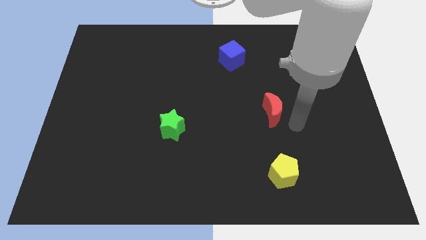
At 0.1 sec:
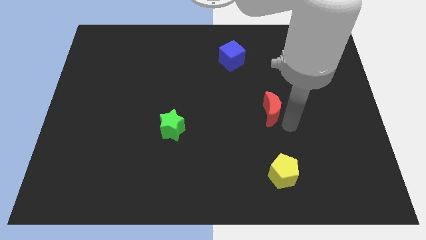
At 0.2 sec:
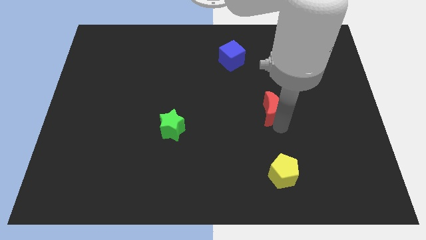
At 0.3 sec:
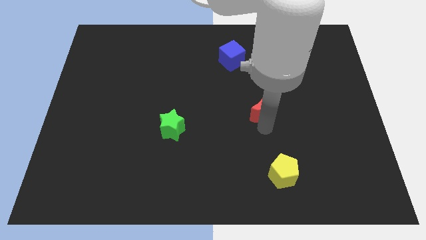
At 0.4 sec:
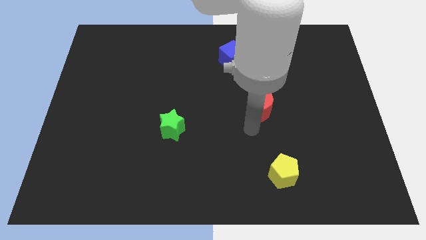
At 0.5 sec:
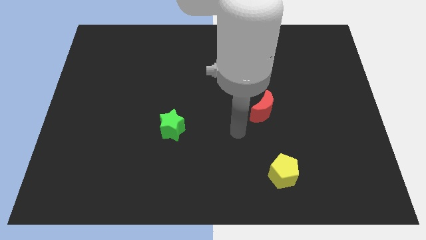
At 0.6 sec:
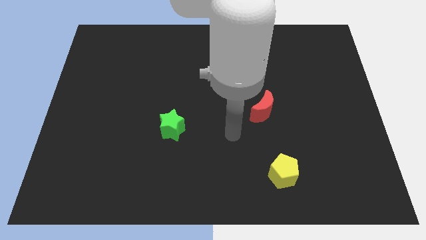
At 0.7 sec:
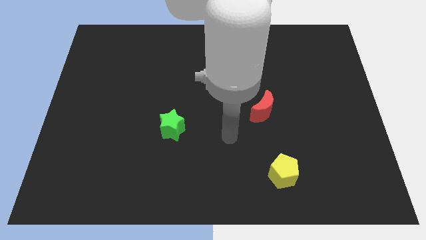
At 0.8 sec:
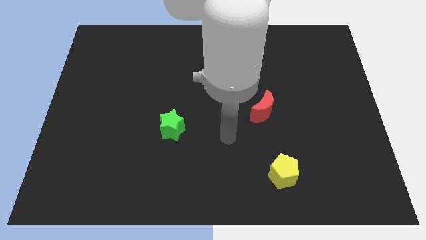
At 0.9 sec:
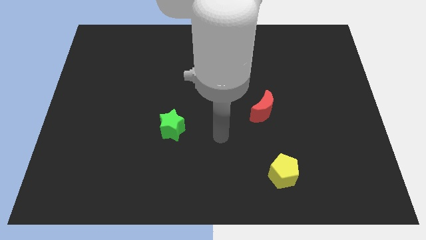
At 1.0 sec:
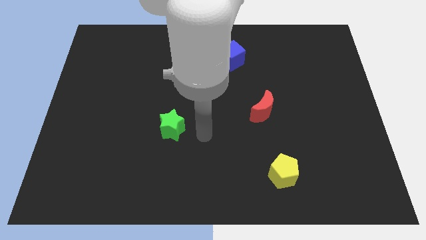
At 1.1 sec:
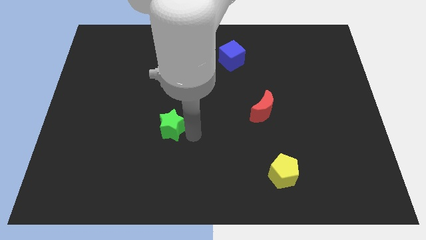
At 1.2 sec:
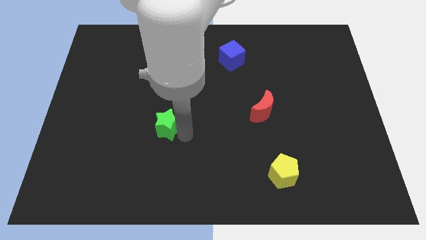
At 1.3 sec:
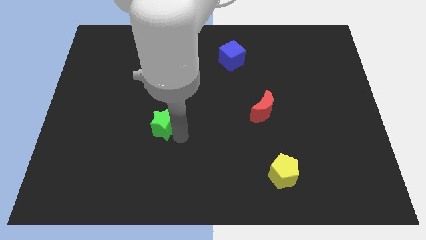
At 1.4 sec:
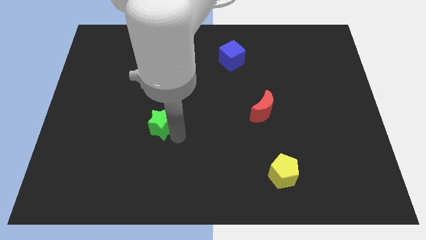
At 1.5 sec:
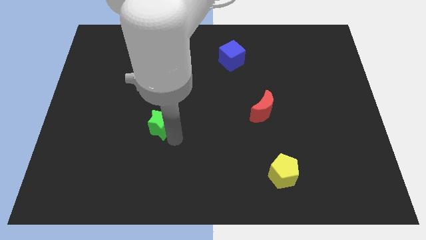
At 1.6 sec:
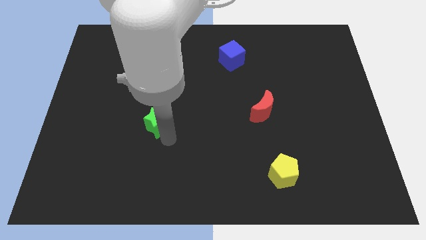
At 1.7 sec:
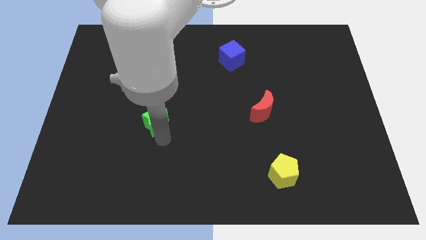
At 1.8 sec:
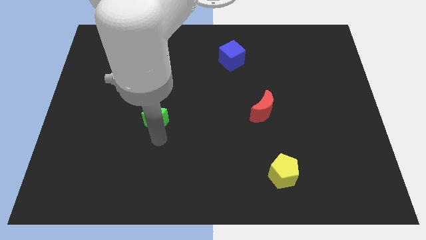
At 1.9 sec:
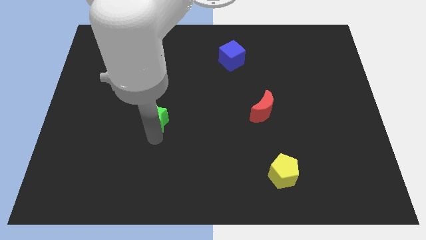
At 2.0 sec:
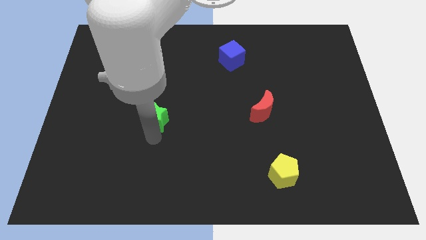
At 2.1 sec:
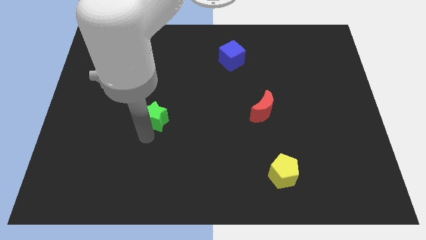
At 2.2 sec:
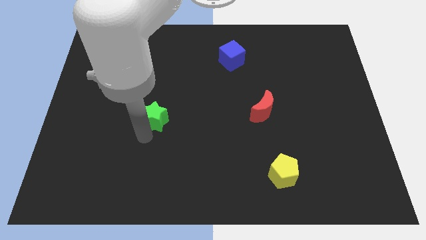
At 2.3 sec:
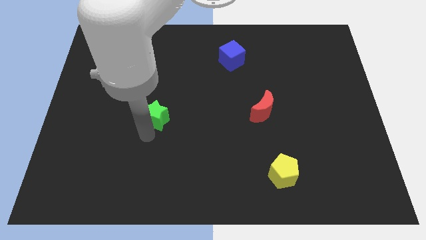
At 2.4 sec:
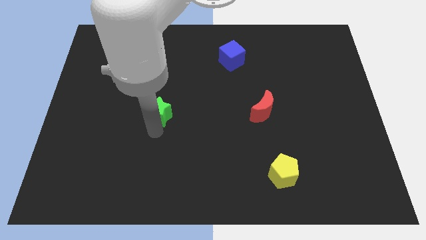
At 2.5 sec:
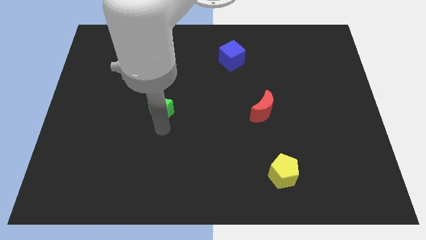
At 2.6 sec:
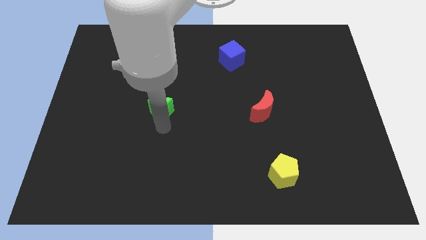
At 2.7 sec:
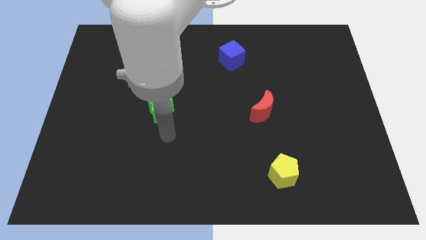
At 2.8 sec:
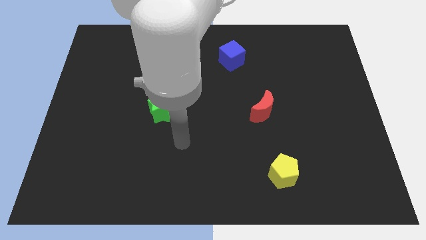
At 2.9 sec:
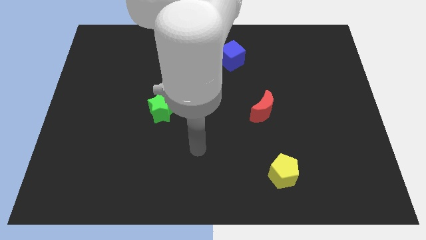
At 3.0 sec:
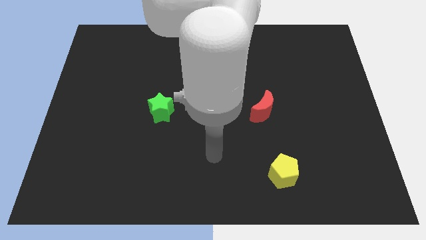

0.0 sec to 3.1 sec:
place the green star horizontally to the left of the red crescent

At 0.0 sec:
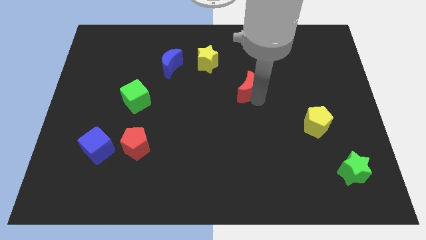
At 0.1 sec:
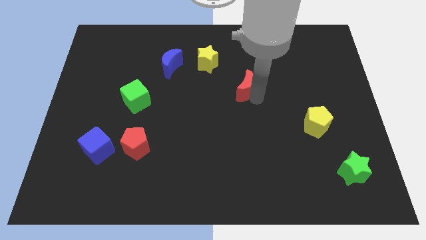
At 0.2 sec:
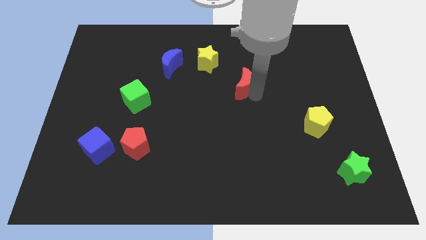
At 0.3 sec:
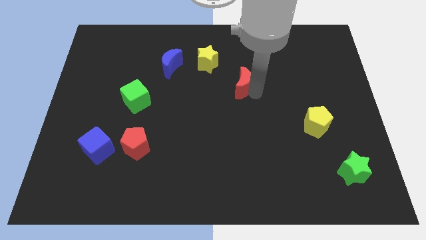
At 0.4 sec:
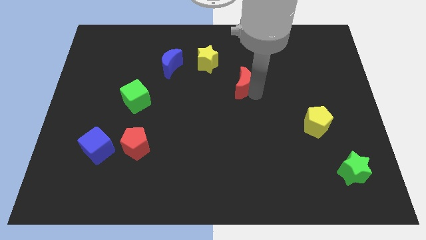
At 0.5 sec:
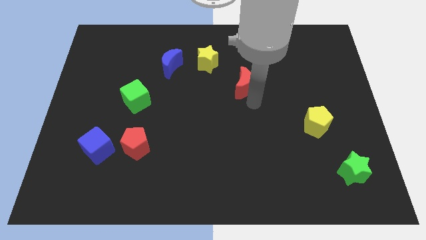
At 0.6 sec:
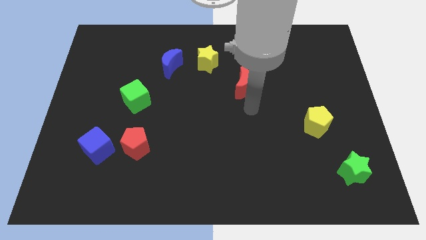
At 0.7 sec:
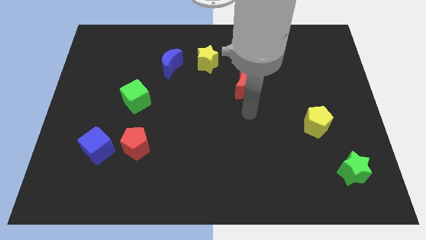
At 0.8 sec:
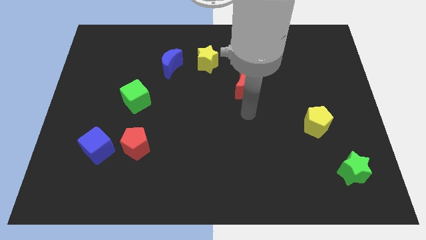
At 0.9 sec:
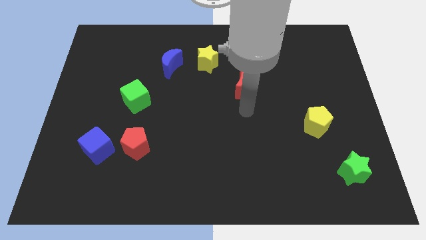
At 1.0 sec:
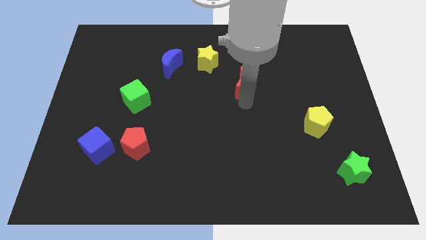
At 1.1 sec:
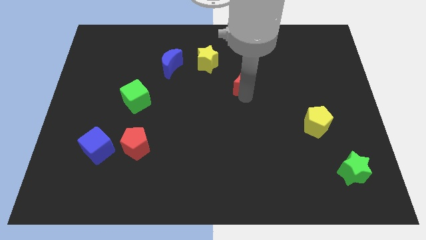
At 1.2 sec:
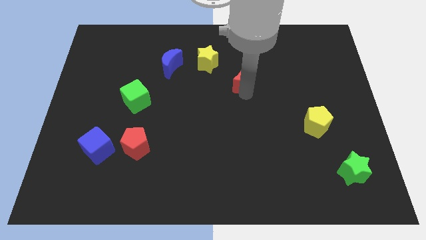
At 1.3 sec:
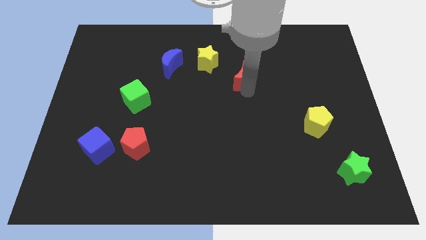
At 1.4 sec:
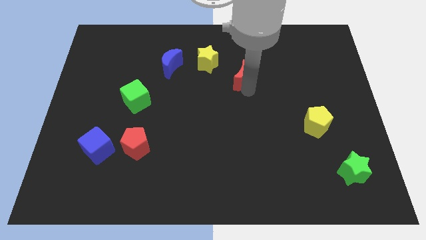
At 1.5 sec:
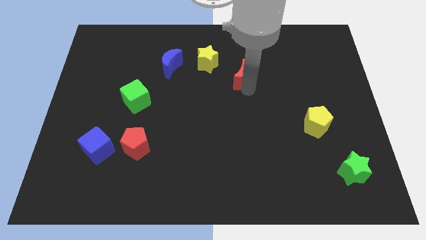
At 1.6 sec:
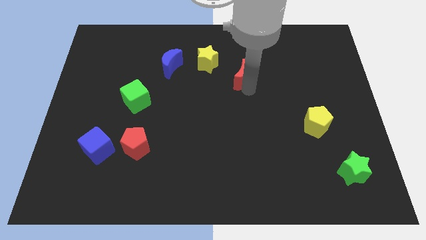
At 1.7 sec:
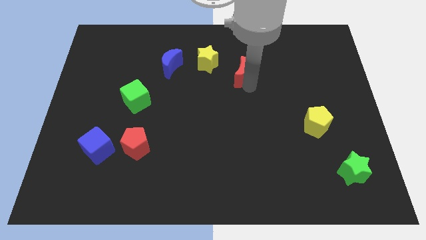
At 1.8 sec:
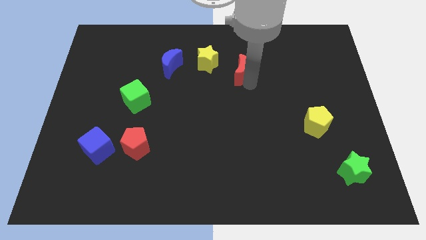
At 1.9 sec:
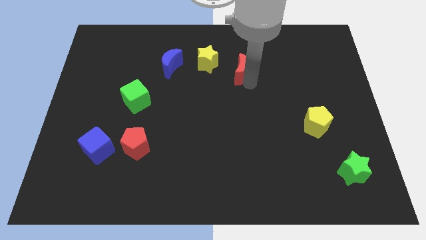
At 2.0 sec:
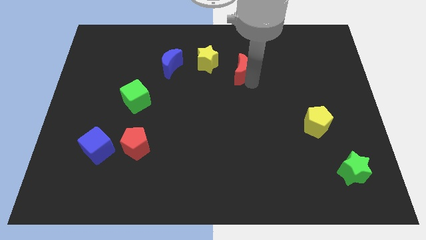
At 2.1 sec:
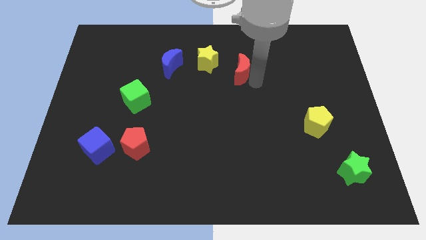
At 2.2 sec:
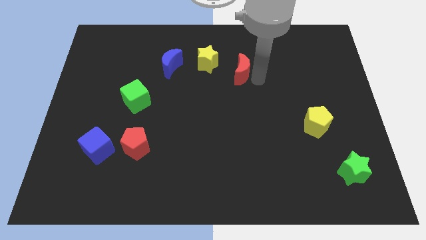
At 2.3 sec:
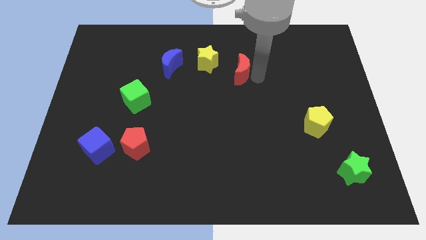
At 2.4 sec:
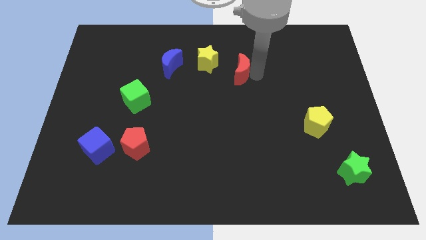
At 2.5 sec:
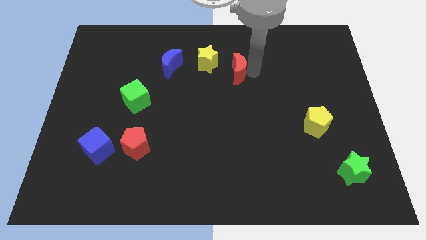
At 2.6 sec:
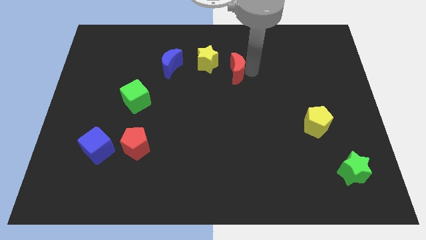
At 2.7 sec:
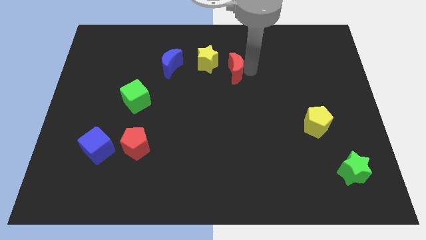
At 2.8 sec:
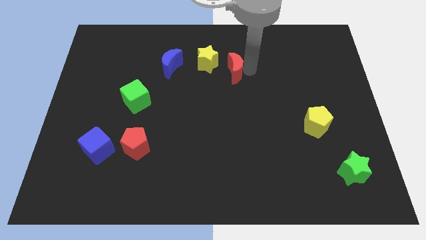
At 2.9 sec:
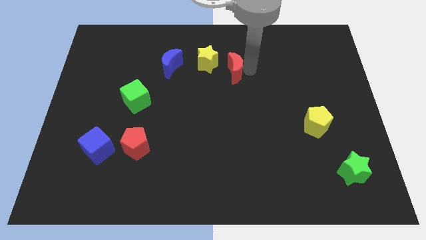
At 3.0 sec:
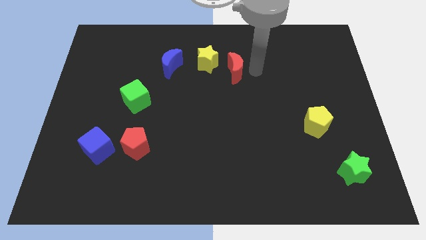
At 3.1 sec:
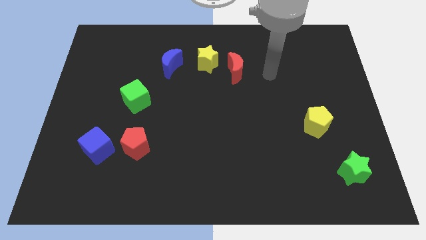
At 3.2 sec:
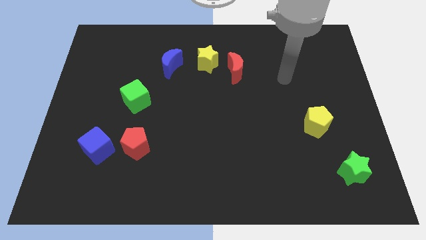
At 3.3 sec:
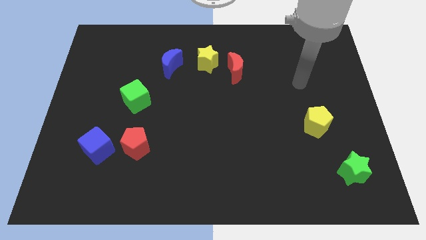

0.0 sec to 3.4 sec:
move the red moon right beside the yellow star

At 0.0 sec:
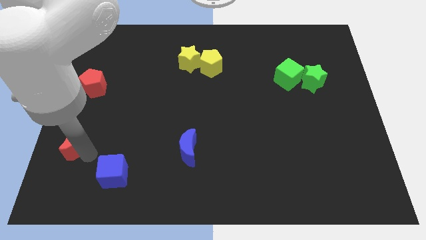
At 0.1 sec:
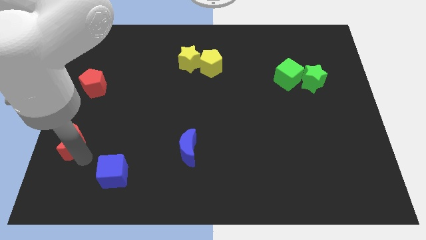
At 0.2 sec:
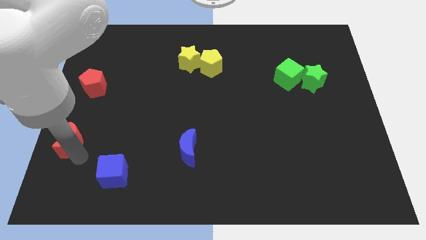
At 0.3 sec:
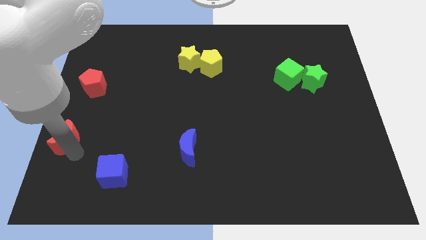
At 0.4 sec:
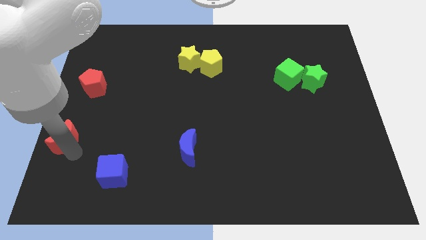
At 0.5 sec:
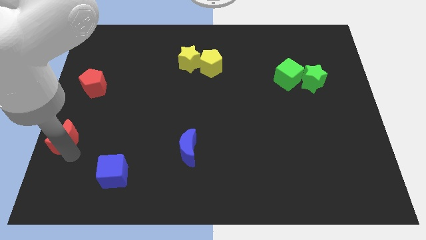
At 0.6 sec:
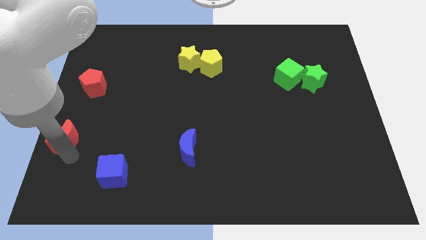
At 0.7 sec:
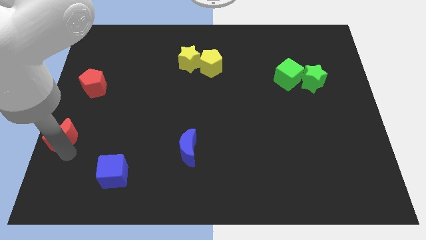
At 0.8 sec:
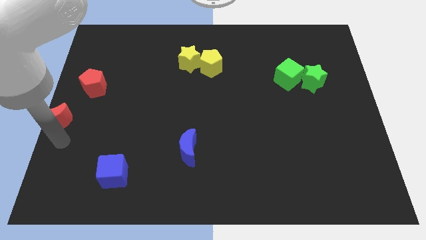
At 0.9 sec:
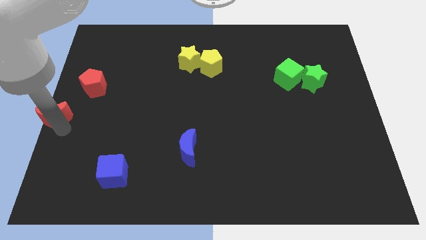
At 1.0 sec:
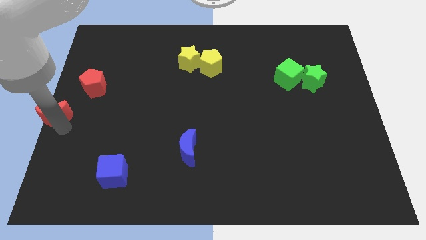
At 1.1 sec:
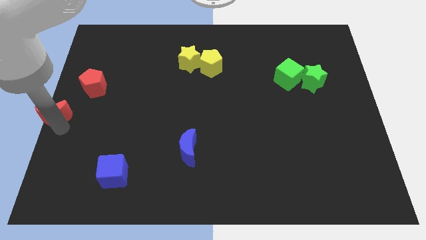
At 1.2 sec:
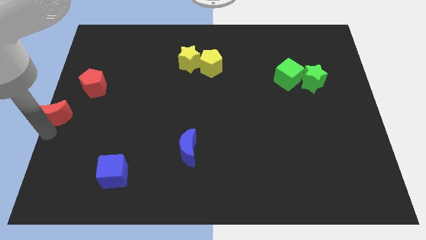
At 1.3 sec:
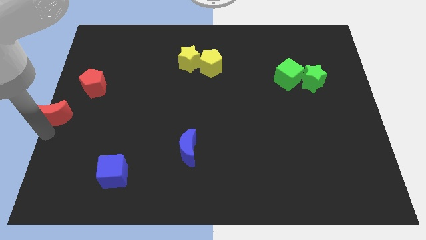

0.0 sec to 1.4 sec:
place the red crescent at the left center of the board

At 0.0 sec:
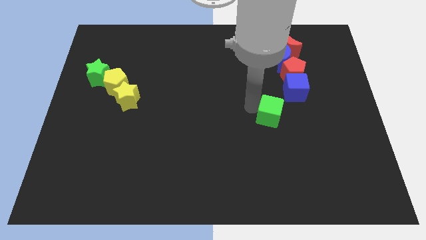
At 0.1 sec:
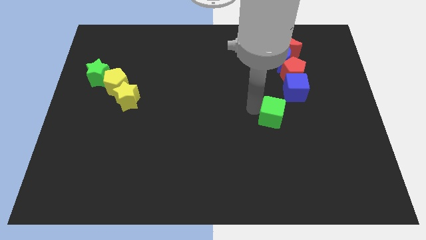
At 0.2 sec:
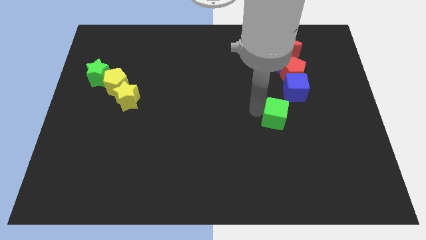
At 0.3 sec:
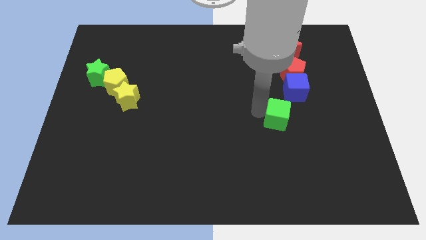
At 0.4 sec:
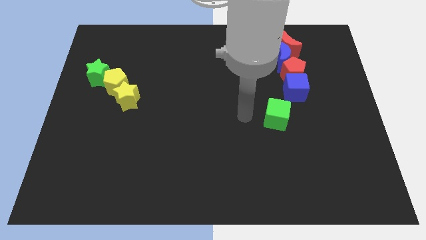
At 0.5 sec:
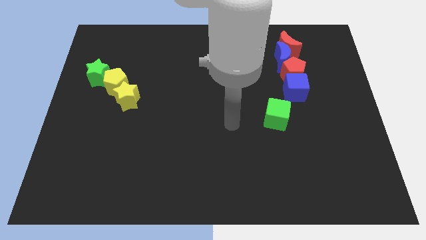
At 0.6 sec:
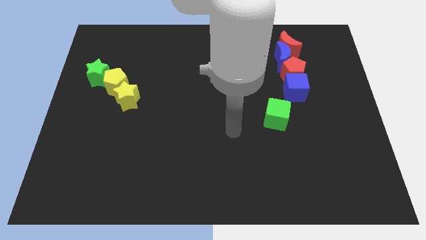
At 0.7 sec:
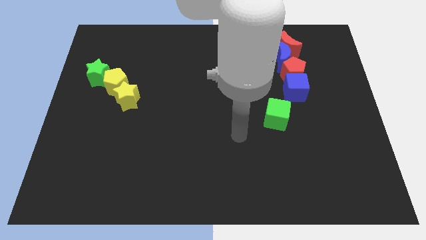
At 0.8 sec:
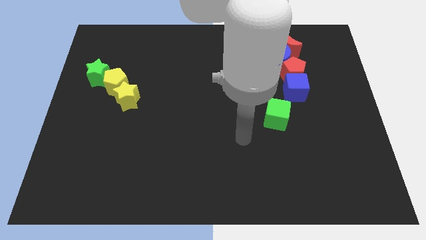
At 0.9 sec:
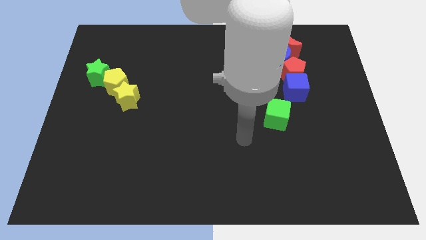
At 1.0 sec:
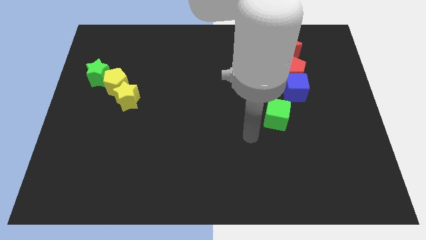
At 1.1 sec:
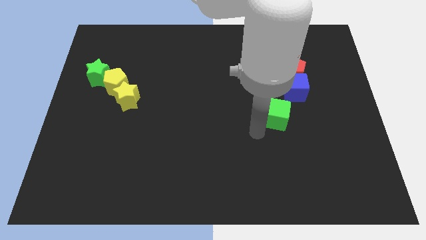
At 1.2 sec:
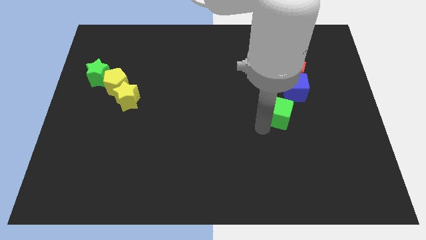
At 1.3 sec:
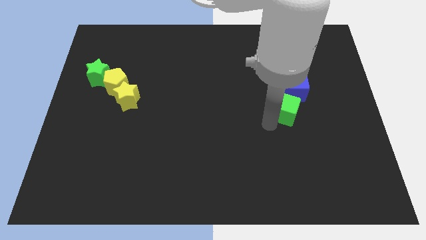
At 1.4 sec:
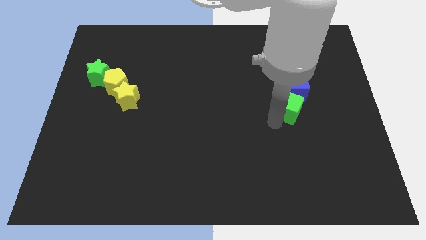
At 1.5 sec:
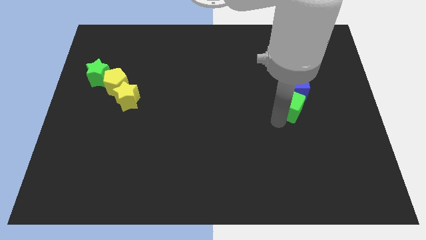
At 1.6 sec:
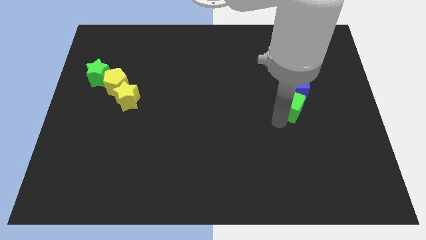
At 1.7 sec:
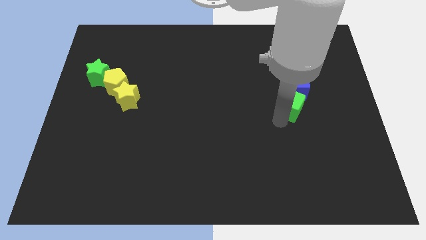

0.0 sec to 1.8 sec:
push the green cube to the bottom of the blue cube
